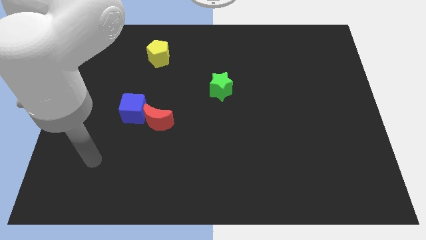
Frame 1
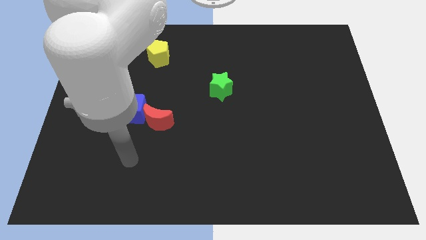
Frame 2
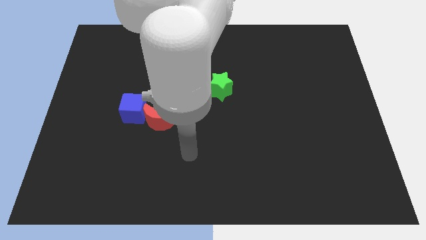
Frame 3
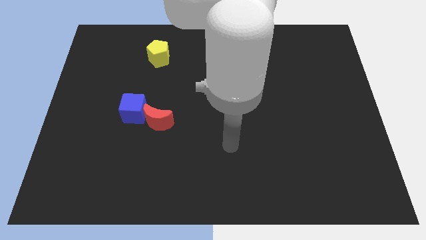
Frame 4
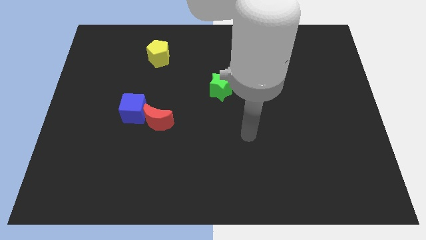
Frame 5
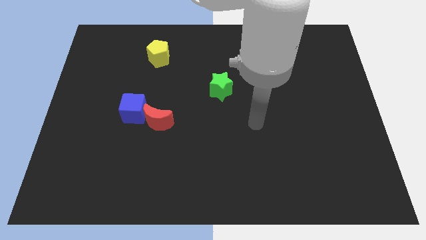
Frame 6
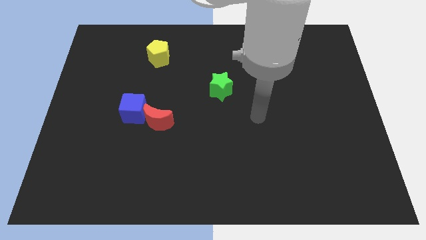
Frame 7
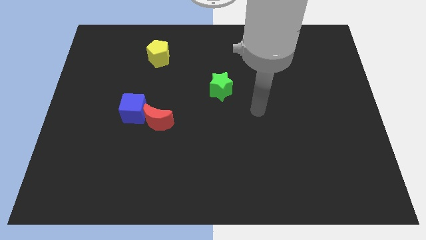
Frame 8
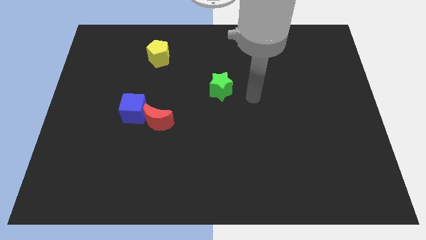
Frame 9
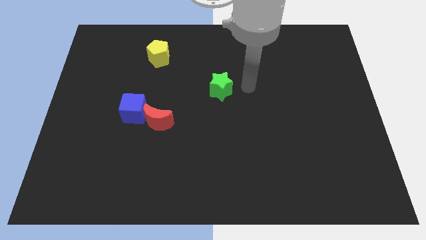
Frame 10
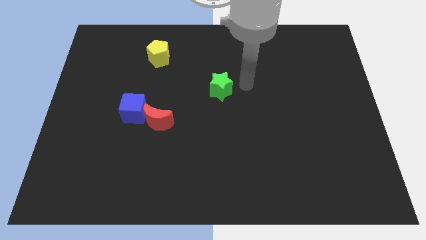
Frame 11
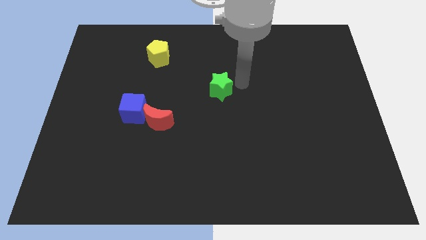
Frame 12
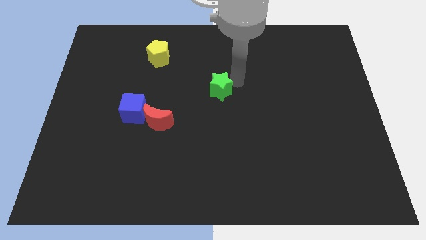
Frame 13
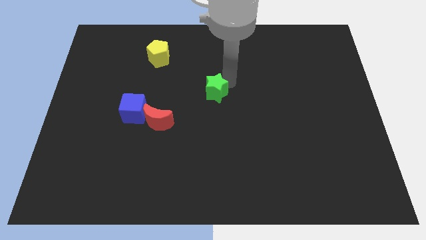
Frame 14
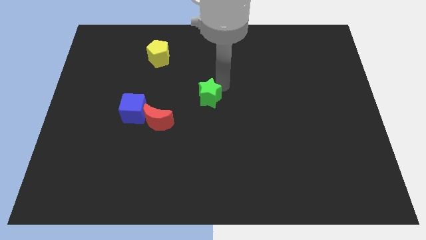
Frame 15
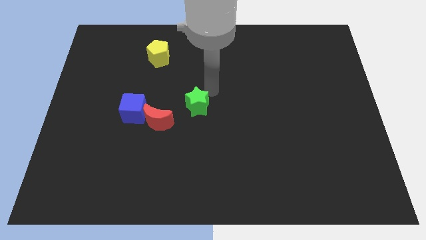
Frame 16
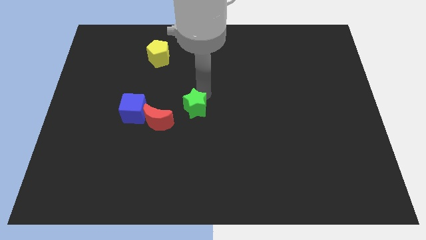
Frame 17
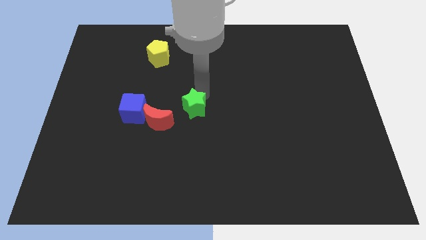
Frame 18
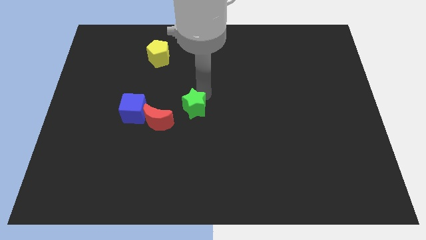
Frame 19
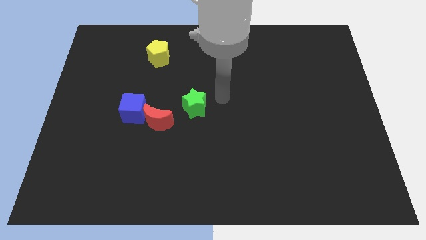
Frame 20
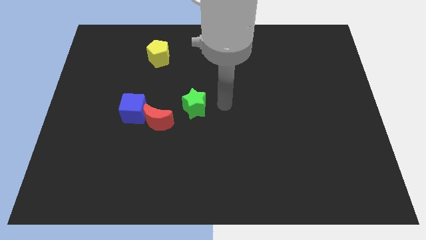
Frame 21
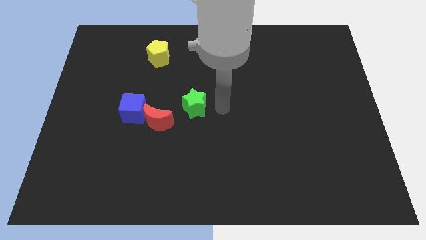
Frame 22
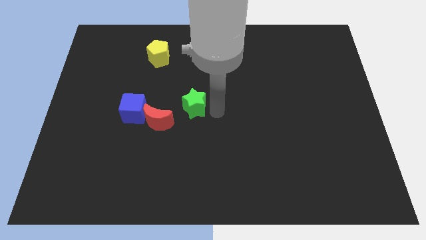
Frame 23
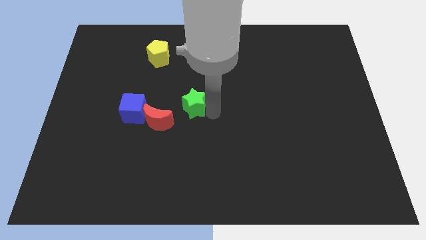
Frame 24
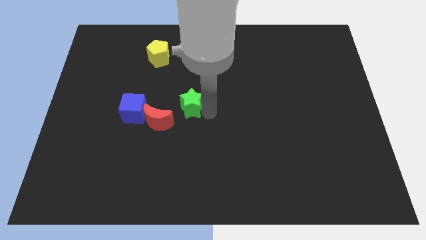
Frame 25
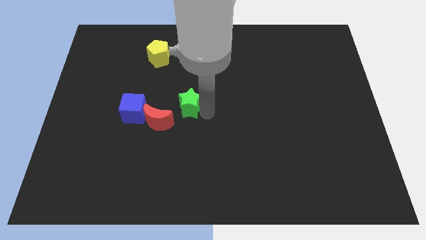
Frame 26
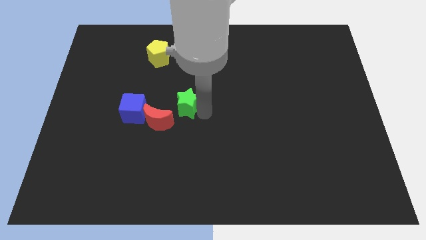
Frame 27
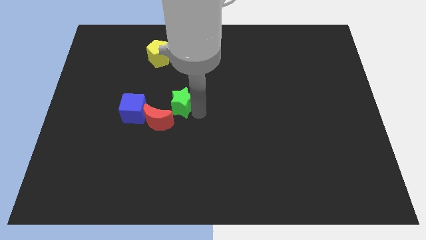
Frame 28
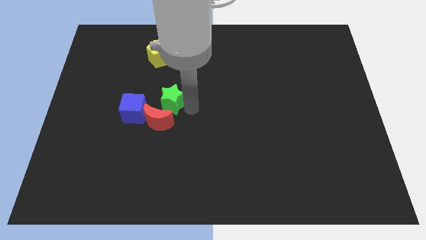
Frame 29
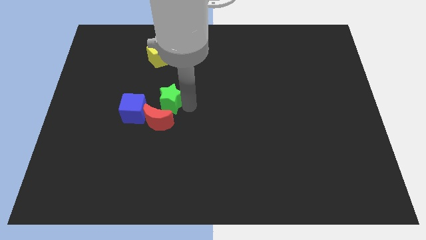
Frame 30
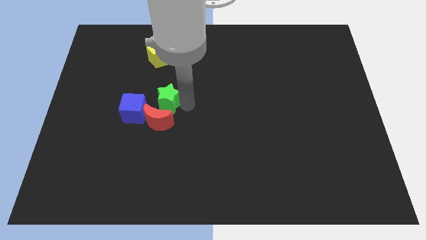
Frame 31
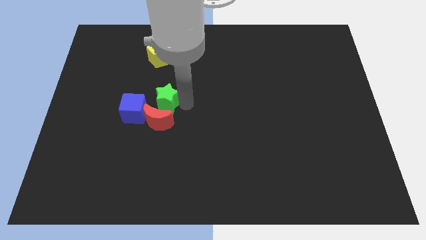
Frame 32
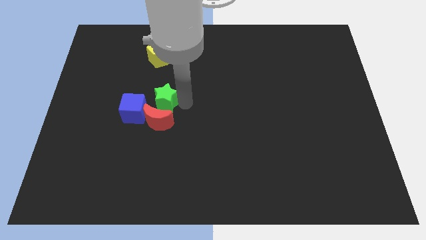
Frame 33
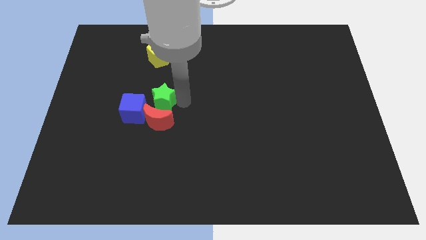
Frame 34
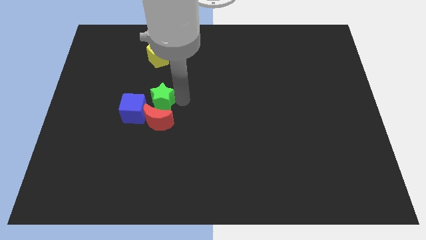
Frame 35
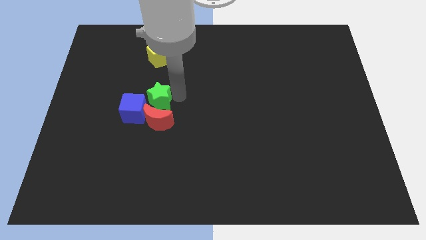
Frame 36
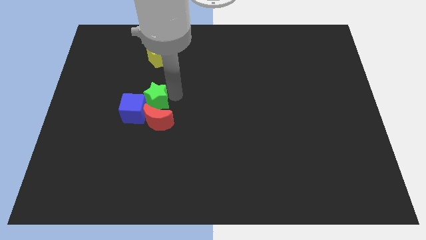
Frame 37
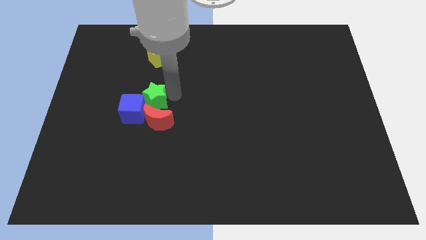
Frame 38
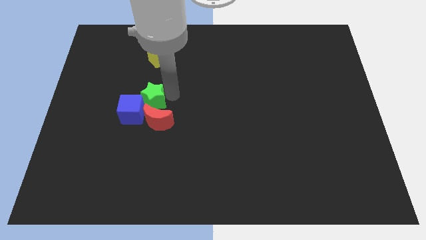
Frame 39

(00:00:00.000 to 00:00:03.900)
push the green block to the blue block

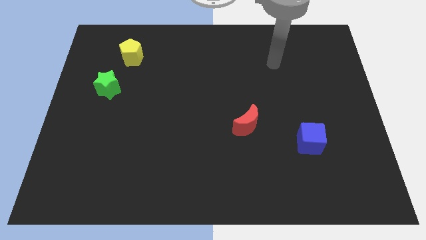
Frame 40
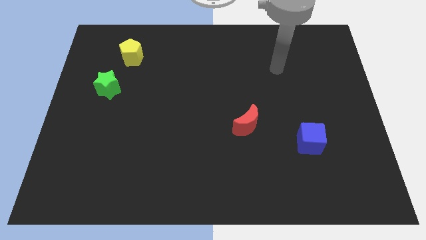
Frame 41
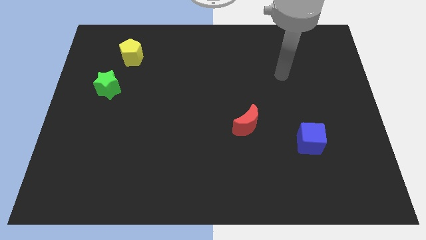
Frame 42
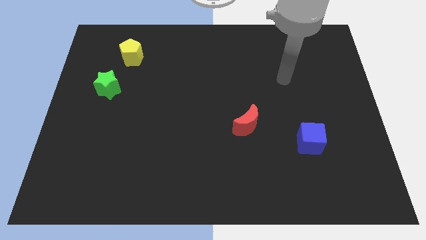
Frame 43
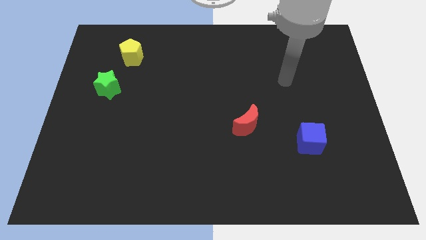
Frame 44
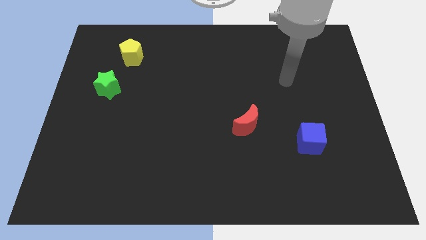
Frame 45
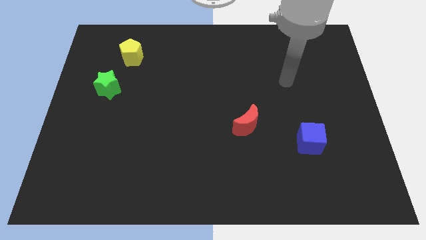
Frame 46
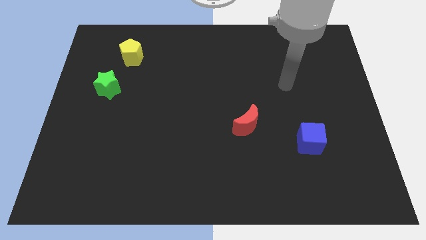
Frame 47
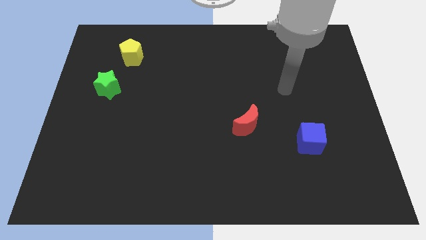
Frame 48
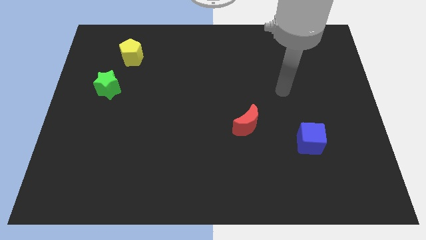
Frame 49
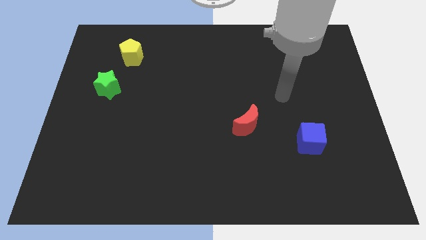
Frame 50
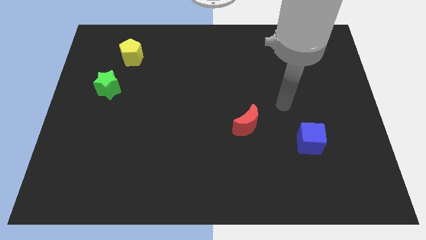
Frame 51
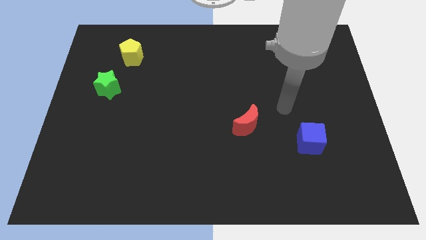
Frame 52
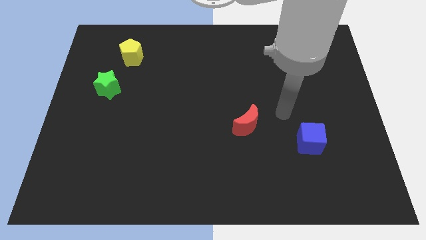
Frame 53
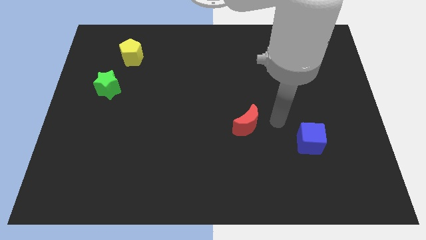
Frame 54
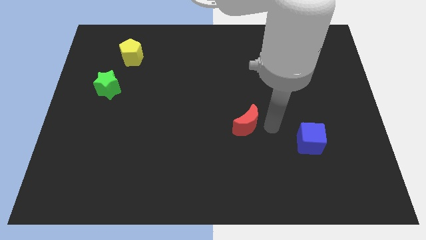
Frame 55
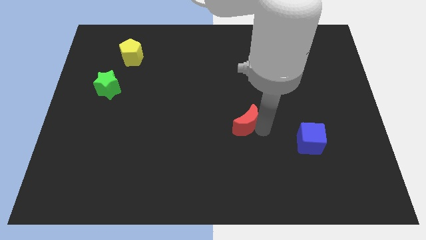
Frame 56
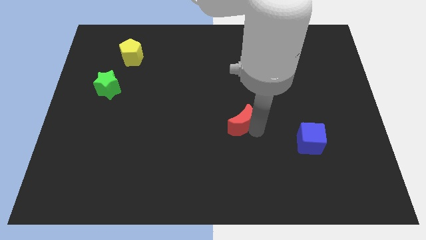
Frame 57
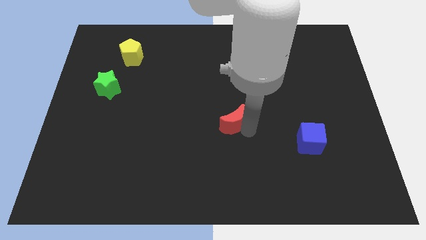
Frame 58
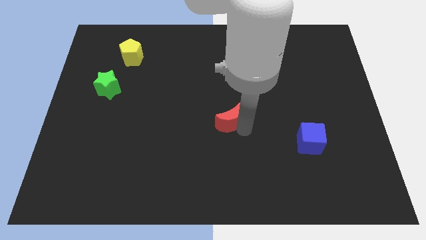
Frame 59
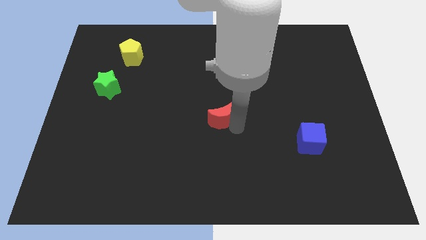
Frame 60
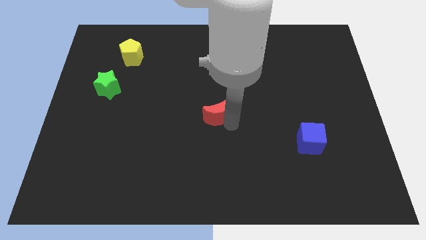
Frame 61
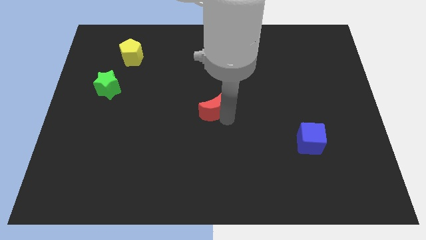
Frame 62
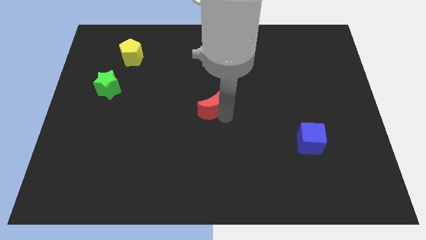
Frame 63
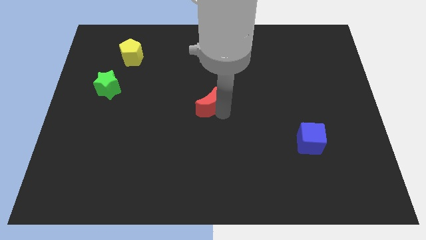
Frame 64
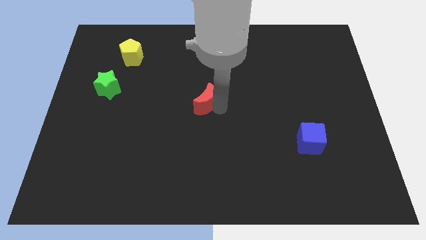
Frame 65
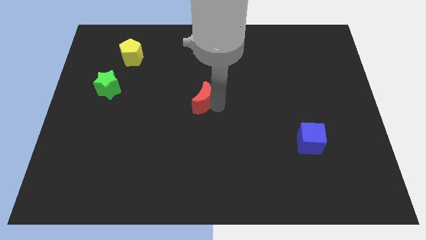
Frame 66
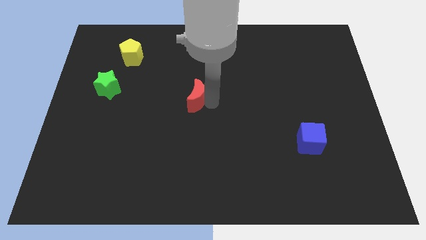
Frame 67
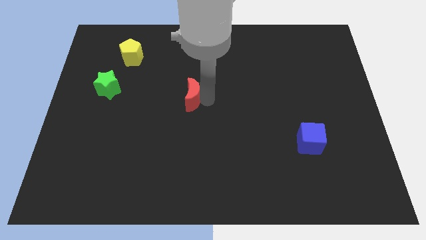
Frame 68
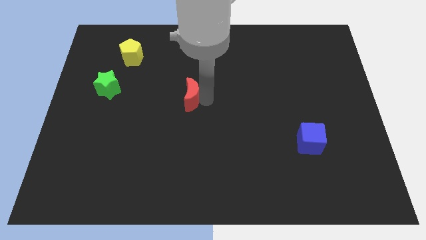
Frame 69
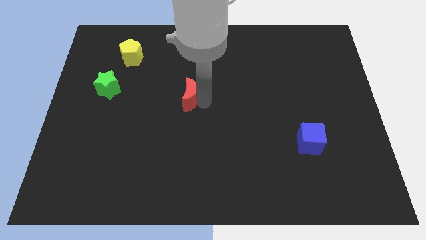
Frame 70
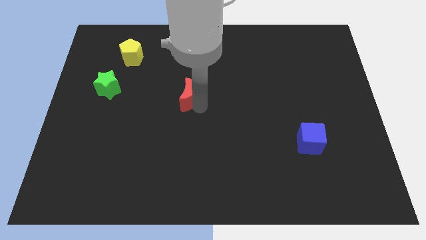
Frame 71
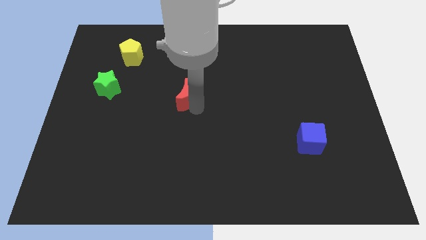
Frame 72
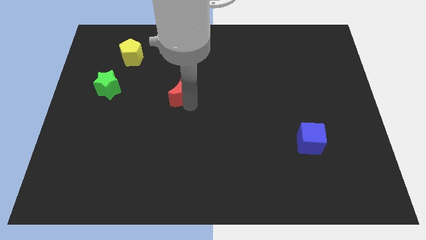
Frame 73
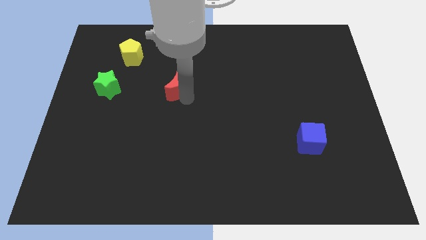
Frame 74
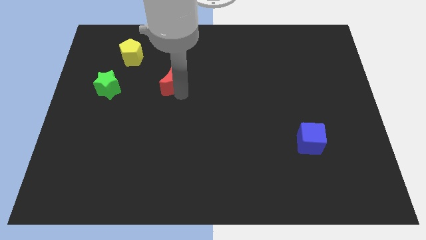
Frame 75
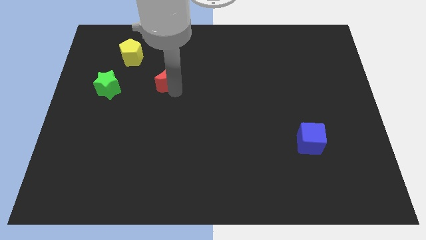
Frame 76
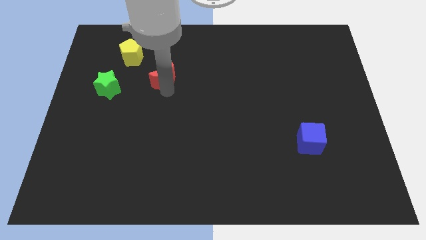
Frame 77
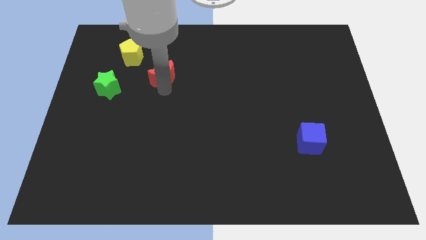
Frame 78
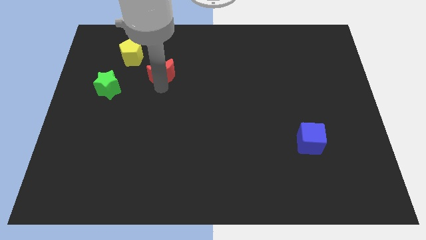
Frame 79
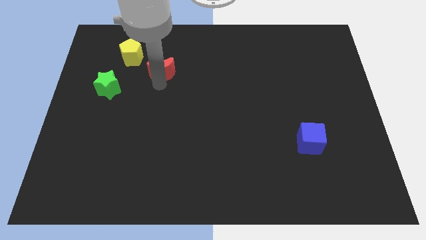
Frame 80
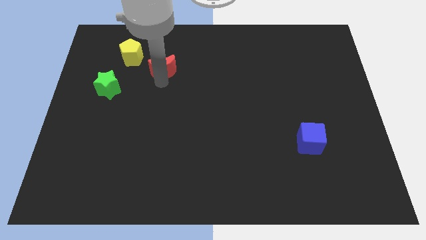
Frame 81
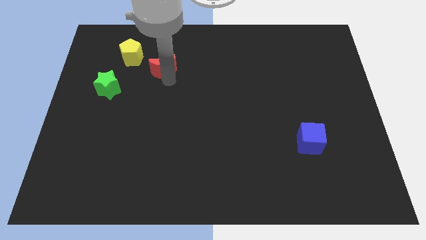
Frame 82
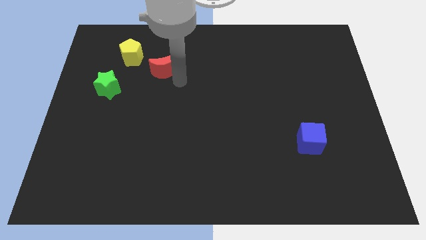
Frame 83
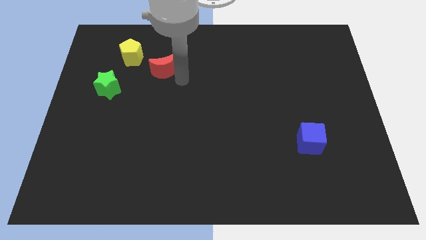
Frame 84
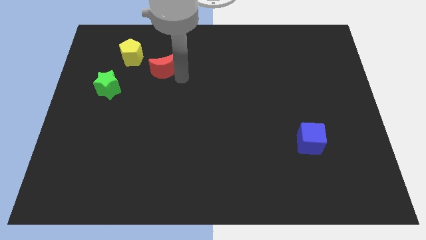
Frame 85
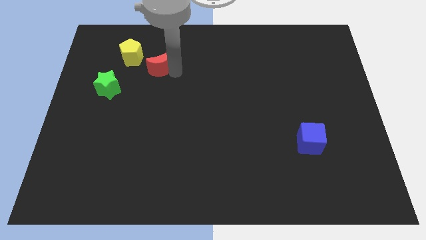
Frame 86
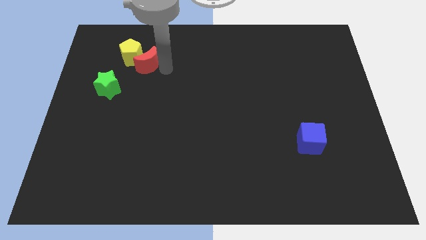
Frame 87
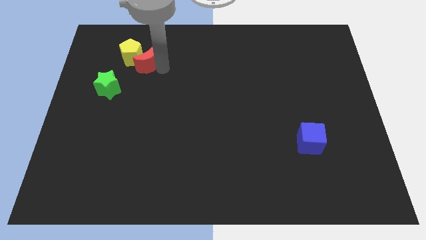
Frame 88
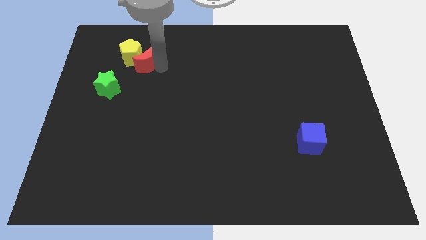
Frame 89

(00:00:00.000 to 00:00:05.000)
put the red moon to the yellow block
